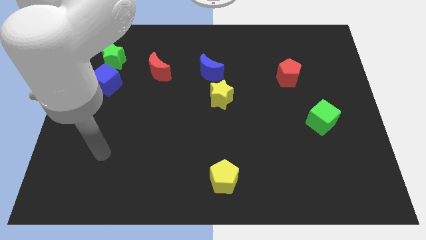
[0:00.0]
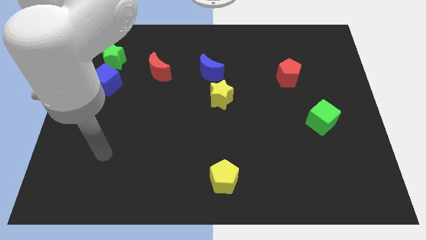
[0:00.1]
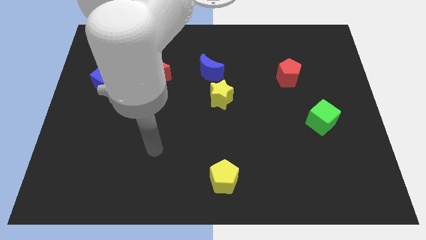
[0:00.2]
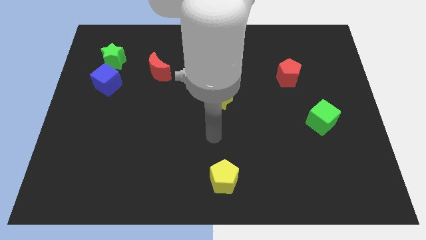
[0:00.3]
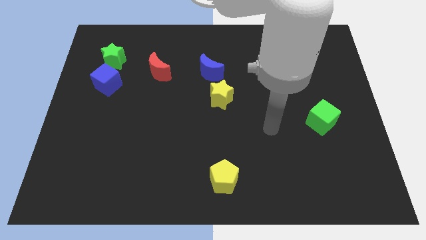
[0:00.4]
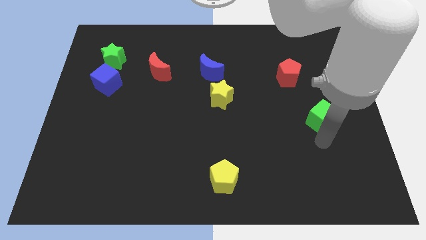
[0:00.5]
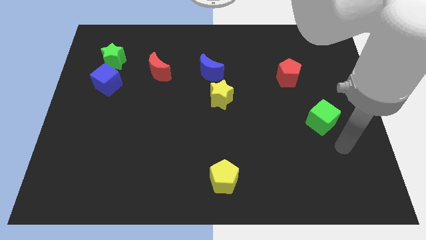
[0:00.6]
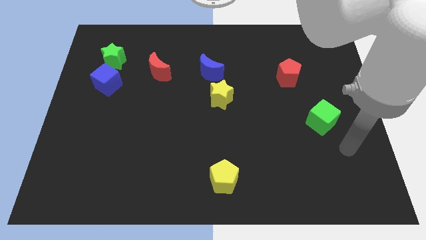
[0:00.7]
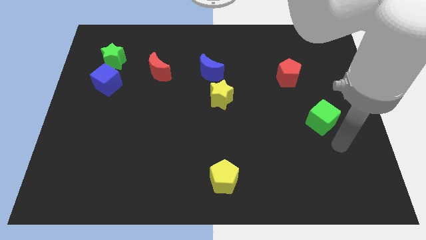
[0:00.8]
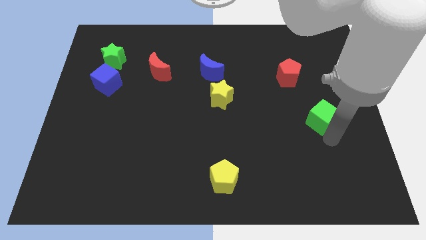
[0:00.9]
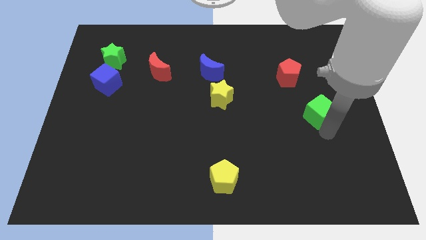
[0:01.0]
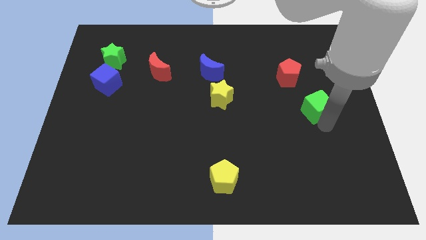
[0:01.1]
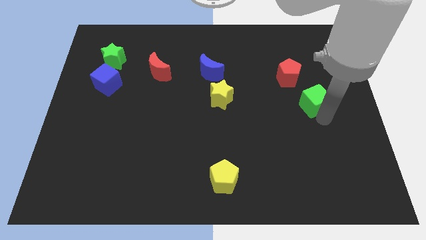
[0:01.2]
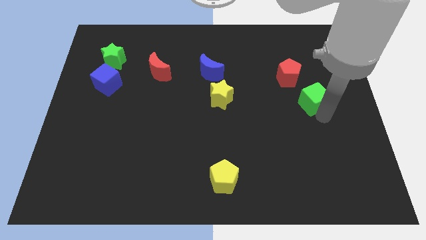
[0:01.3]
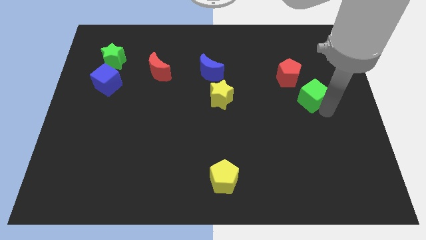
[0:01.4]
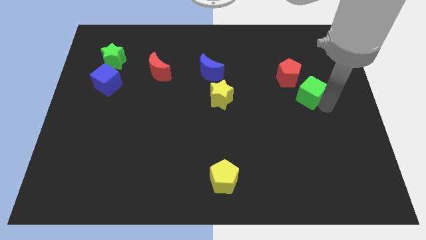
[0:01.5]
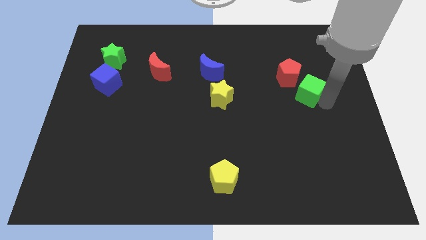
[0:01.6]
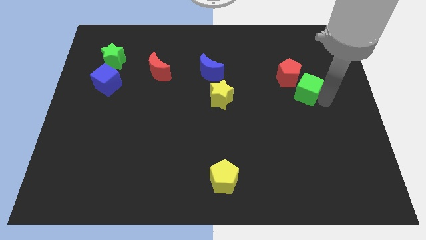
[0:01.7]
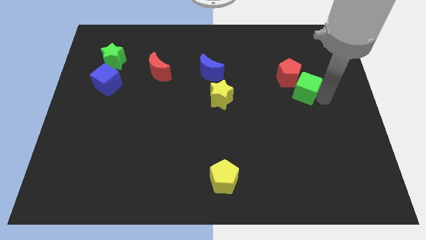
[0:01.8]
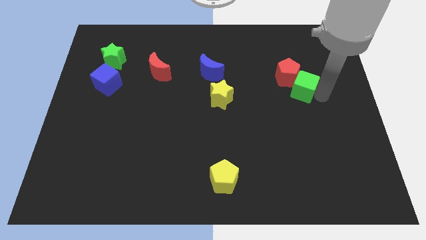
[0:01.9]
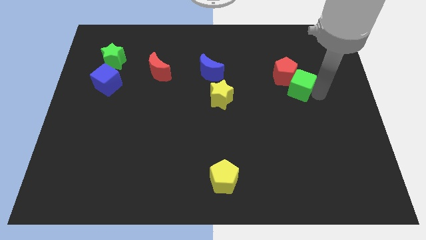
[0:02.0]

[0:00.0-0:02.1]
slide the green cube to the red pentagon

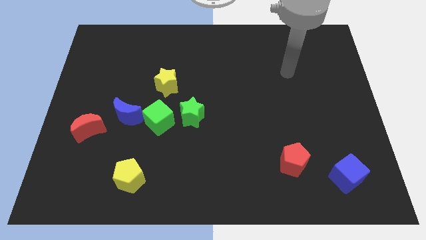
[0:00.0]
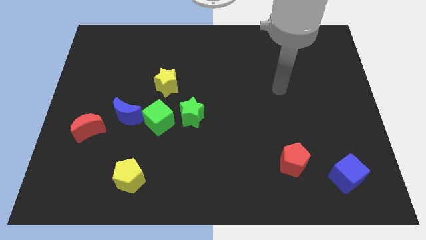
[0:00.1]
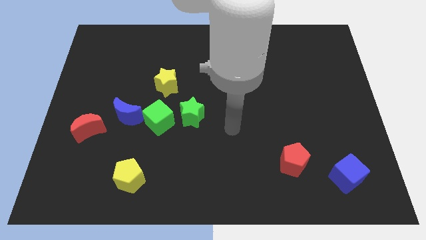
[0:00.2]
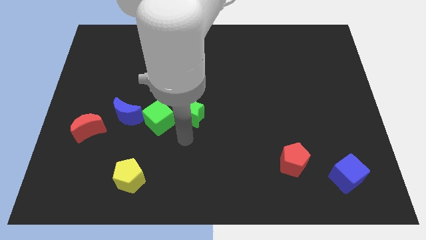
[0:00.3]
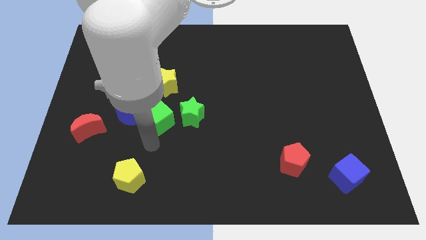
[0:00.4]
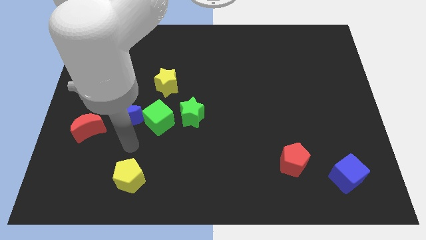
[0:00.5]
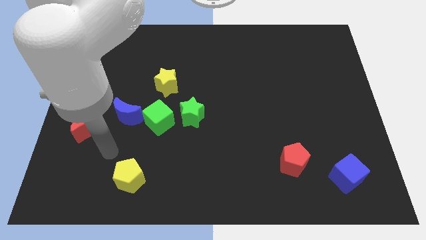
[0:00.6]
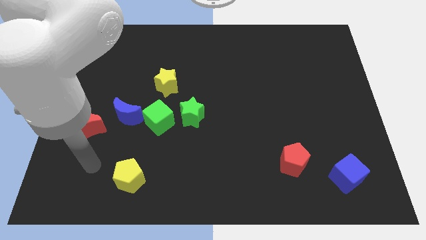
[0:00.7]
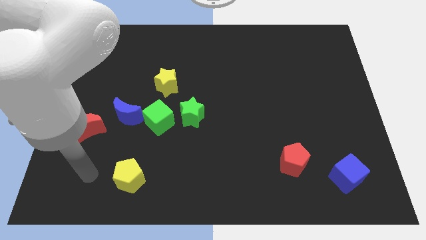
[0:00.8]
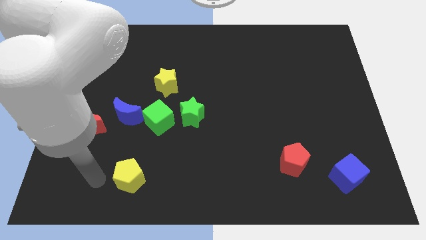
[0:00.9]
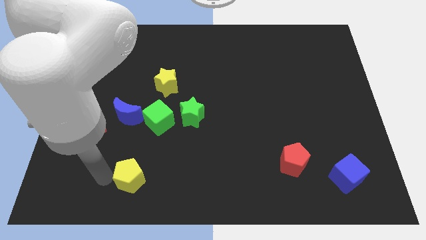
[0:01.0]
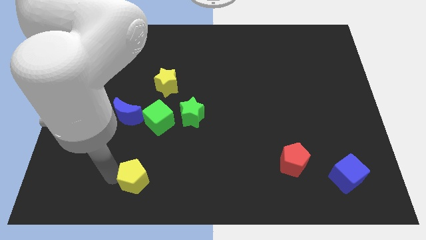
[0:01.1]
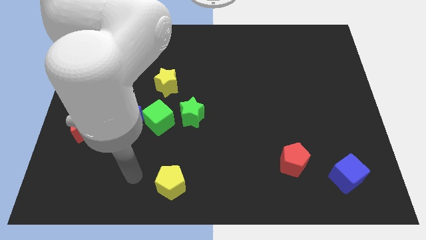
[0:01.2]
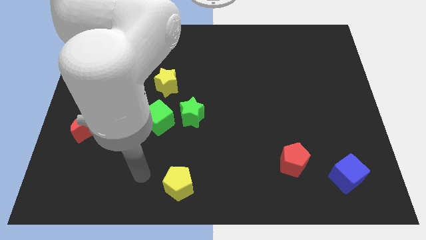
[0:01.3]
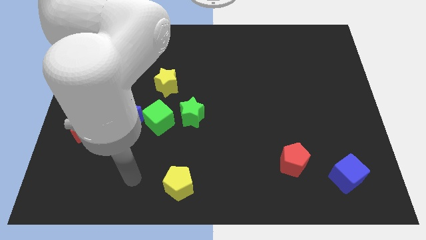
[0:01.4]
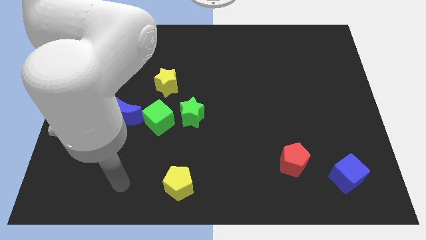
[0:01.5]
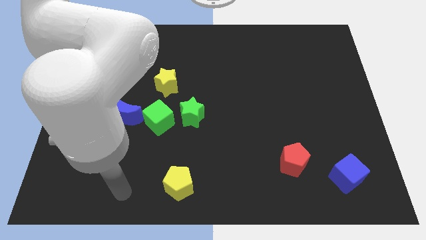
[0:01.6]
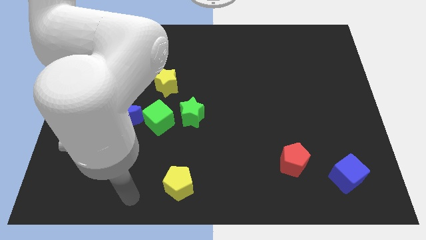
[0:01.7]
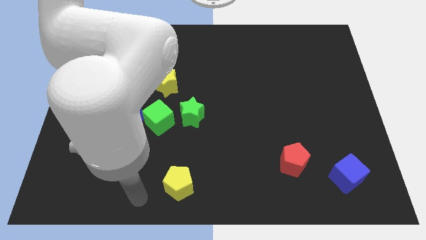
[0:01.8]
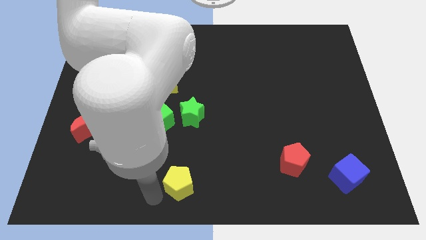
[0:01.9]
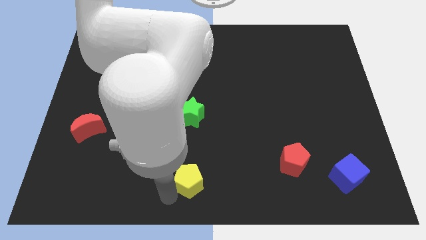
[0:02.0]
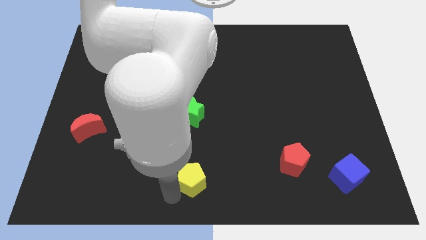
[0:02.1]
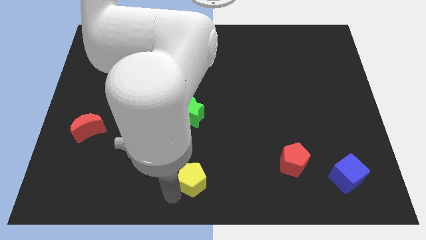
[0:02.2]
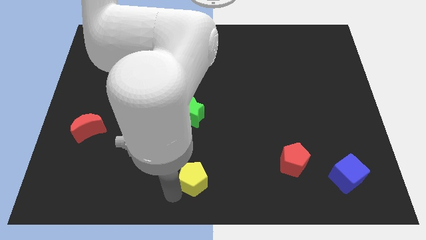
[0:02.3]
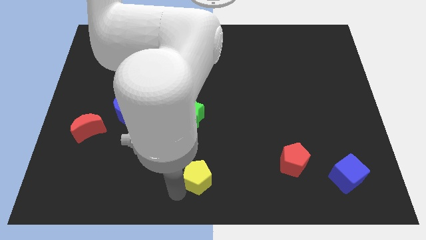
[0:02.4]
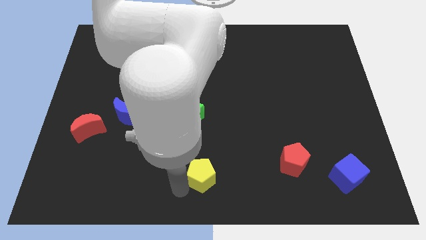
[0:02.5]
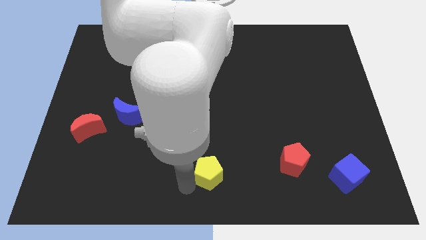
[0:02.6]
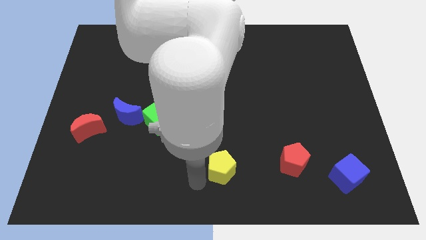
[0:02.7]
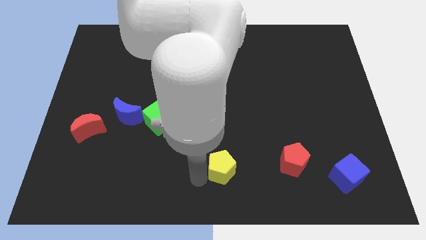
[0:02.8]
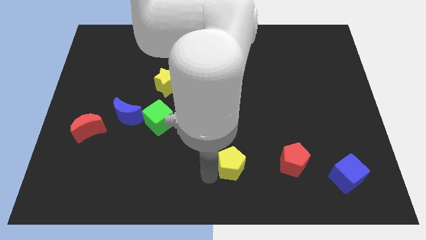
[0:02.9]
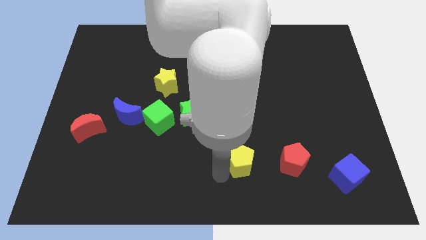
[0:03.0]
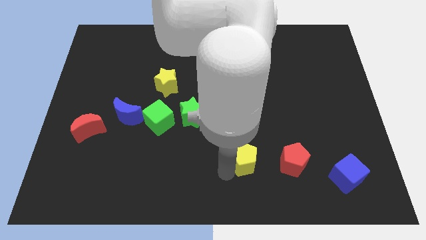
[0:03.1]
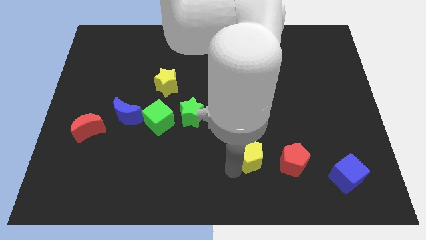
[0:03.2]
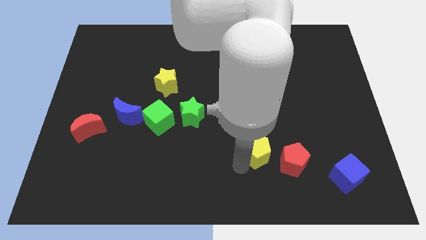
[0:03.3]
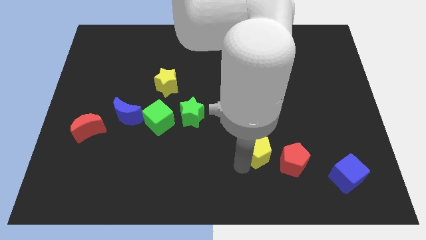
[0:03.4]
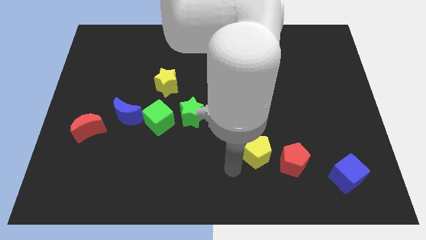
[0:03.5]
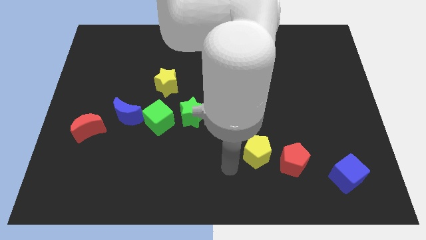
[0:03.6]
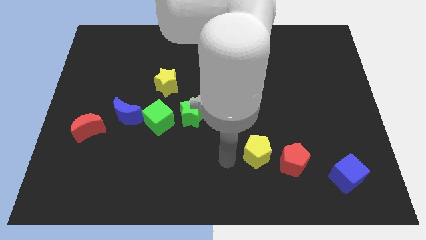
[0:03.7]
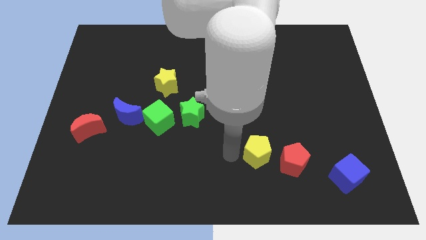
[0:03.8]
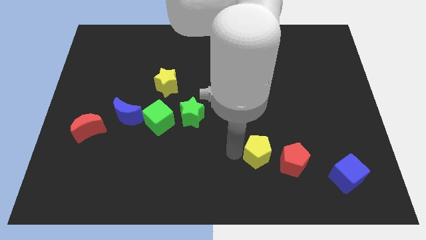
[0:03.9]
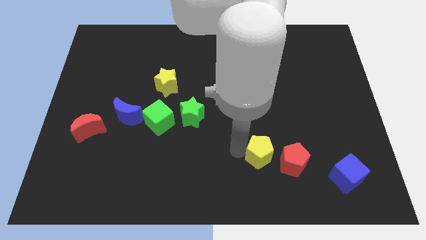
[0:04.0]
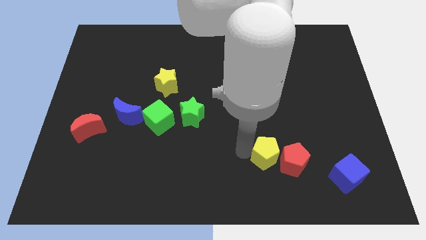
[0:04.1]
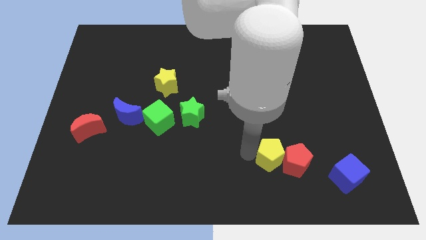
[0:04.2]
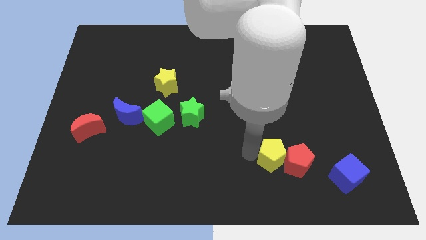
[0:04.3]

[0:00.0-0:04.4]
slide the yellow pentagon towards the red pentagon

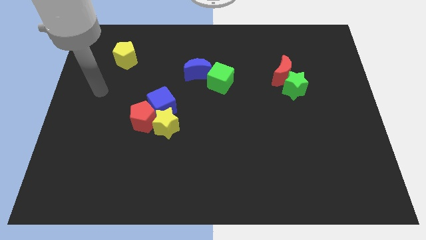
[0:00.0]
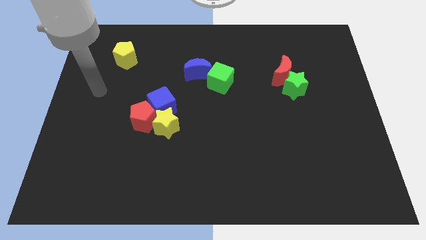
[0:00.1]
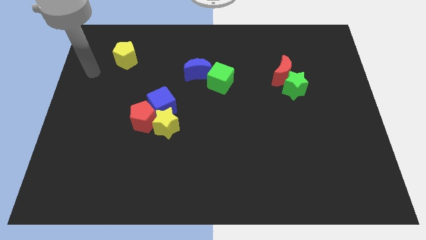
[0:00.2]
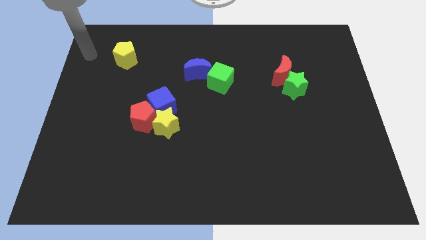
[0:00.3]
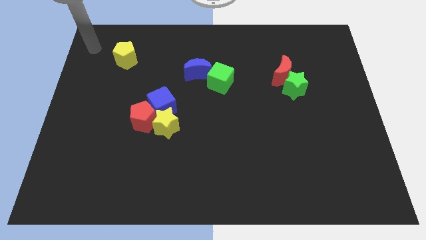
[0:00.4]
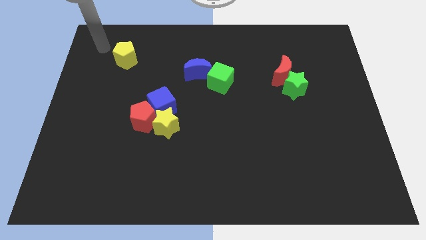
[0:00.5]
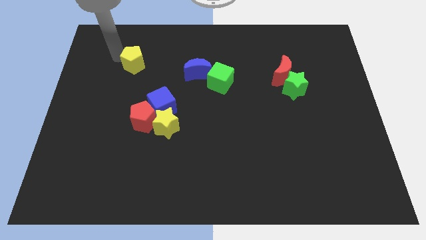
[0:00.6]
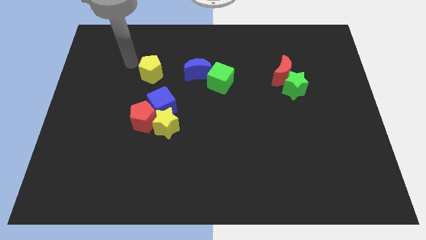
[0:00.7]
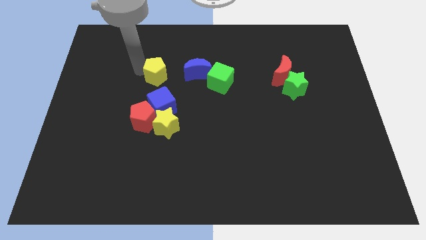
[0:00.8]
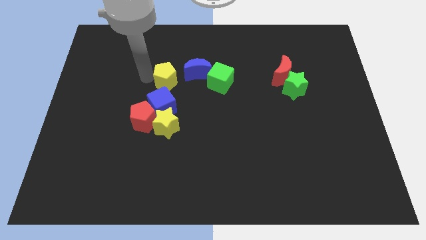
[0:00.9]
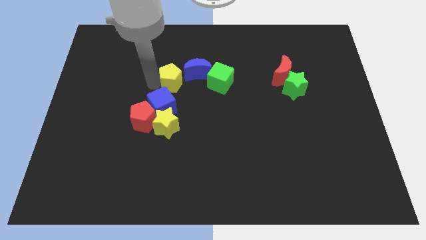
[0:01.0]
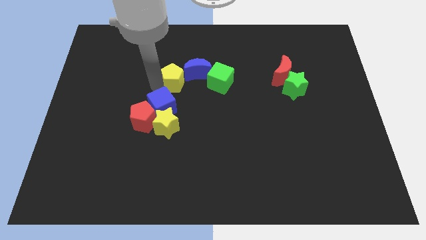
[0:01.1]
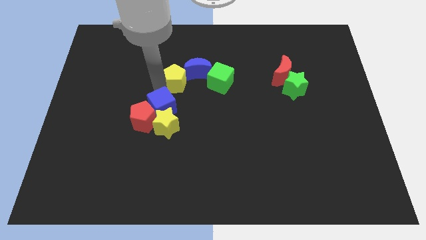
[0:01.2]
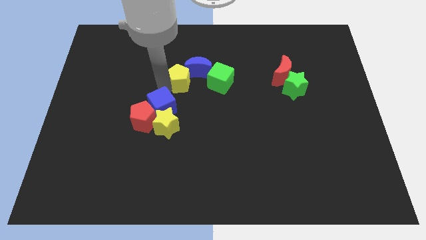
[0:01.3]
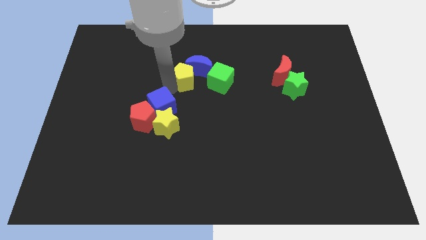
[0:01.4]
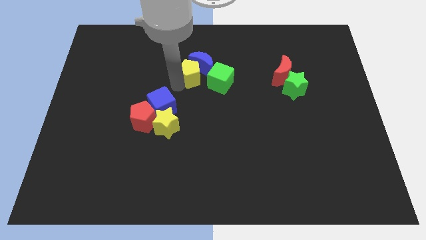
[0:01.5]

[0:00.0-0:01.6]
move the yellow pentagon next to the blue moon

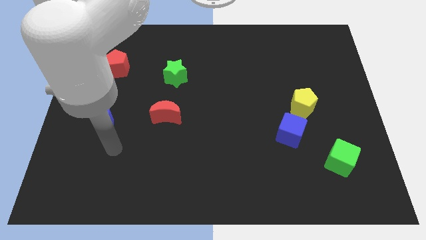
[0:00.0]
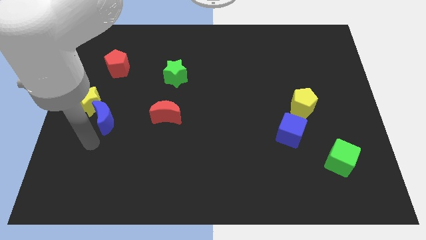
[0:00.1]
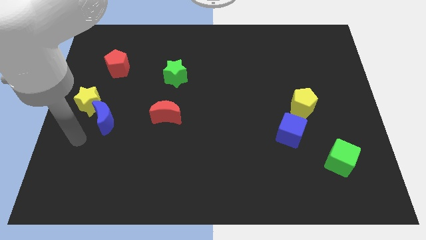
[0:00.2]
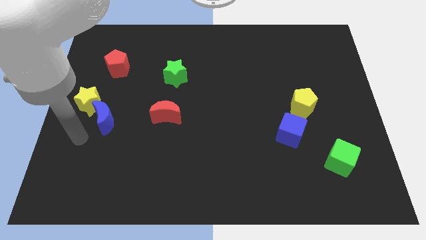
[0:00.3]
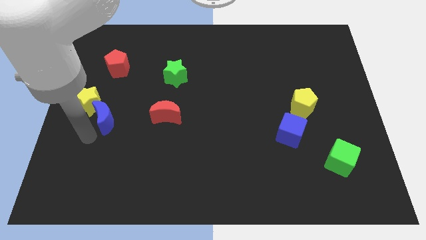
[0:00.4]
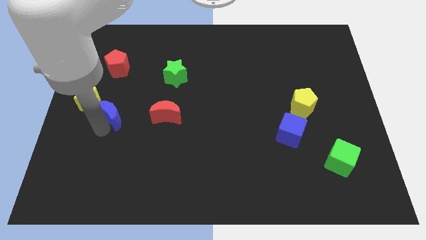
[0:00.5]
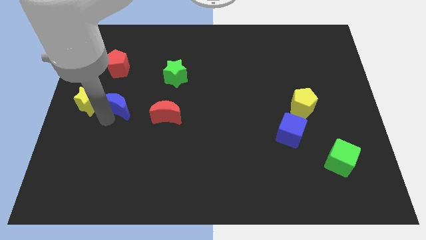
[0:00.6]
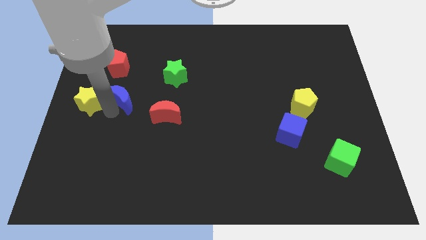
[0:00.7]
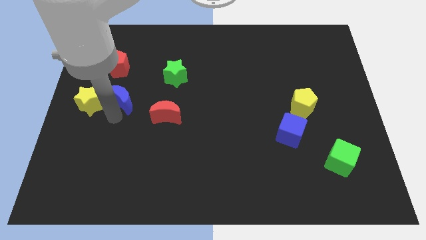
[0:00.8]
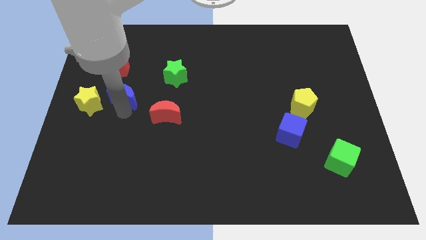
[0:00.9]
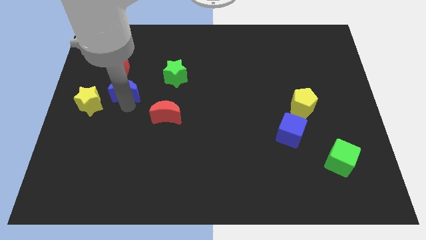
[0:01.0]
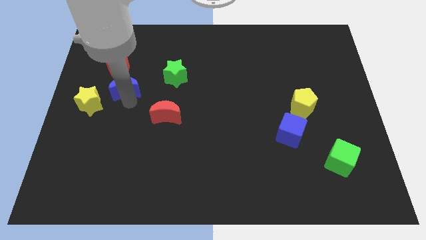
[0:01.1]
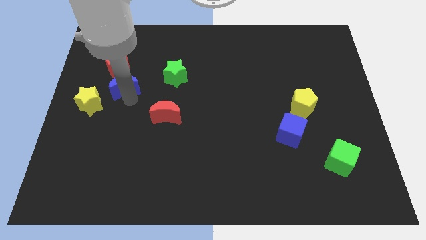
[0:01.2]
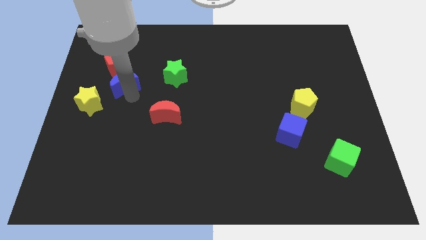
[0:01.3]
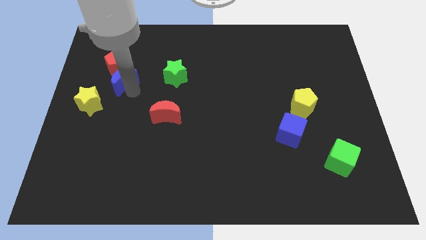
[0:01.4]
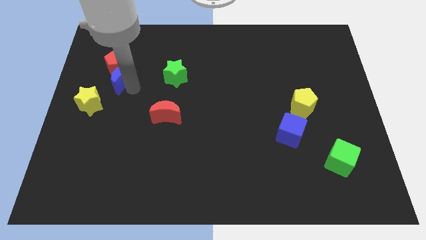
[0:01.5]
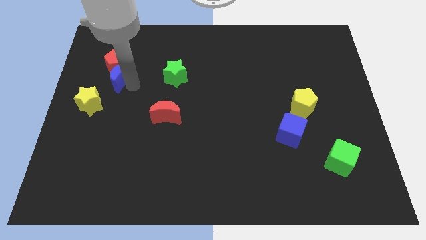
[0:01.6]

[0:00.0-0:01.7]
slide the blue moon close to the red pentagon
